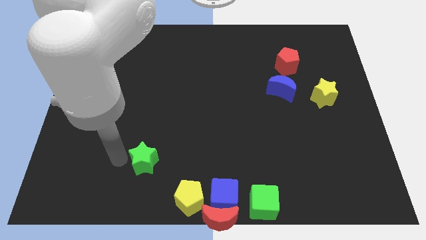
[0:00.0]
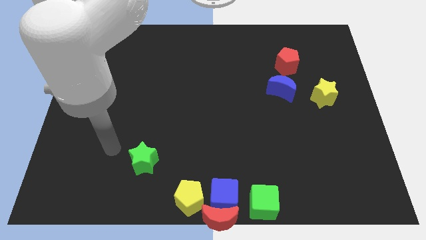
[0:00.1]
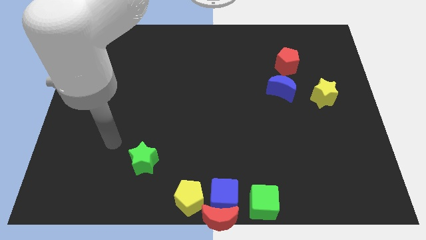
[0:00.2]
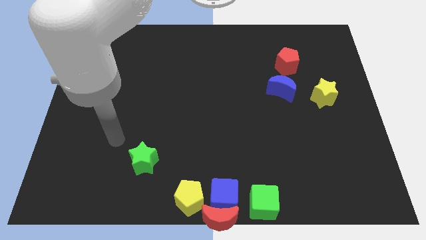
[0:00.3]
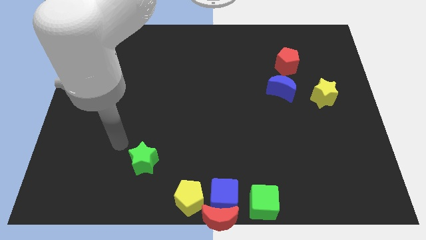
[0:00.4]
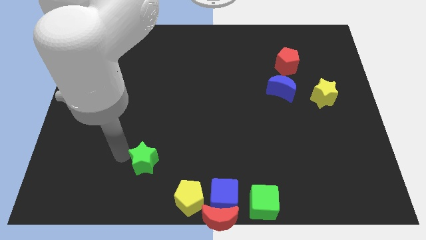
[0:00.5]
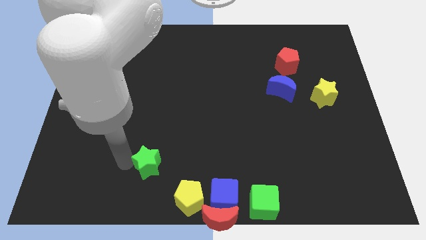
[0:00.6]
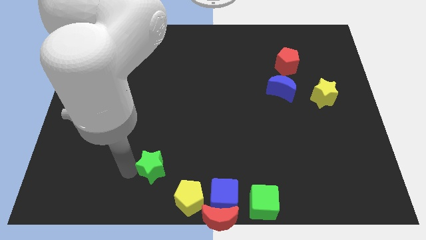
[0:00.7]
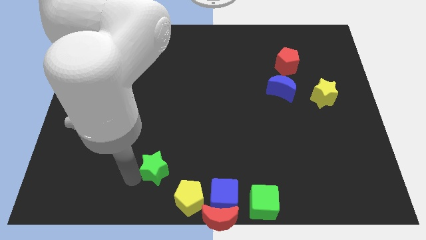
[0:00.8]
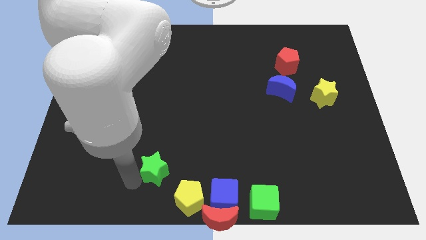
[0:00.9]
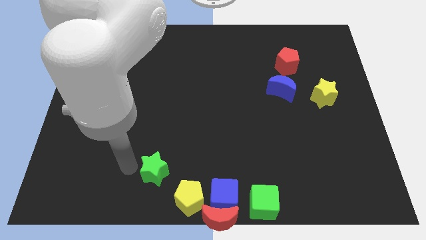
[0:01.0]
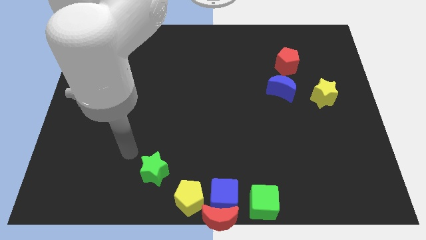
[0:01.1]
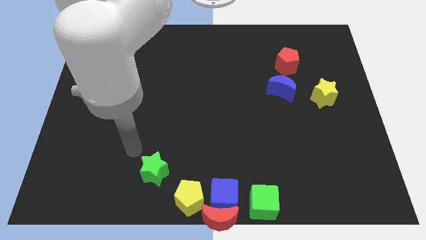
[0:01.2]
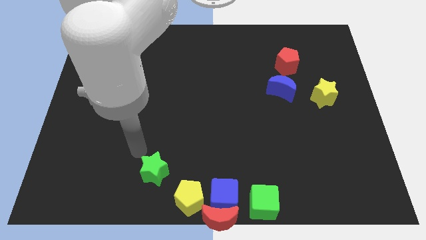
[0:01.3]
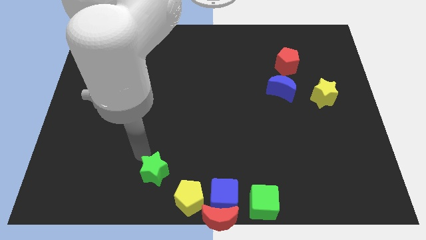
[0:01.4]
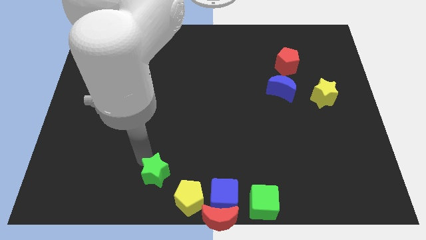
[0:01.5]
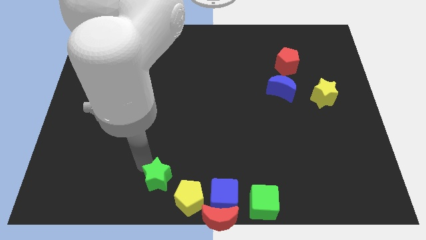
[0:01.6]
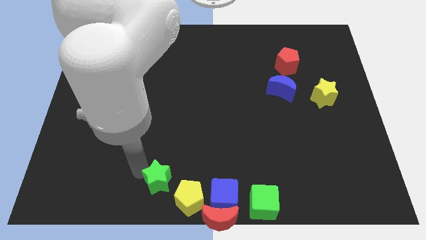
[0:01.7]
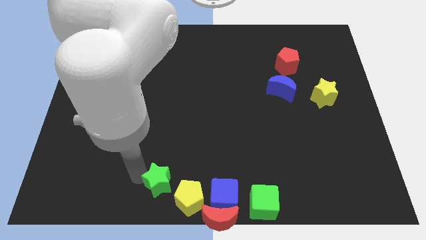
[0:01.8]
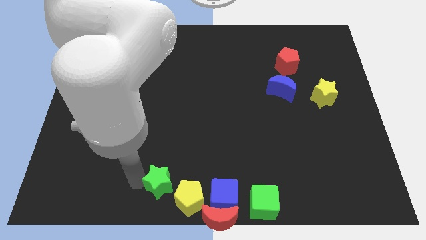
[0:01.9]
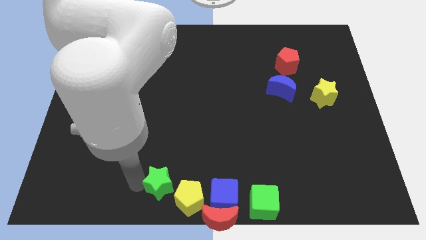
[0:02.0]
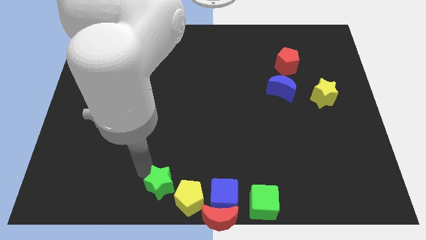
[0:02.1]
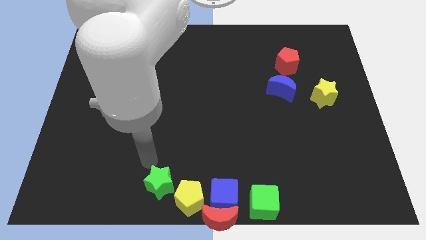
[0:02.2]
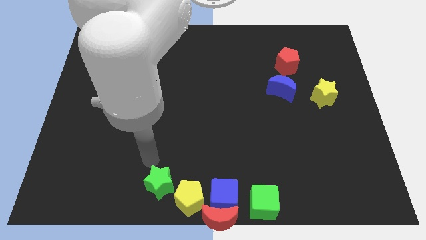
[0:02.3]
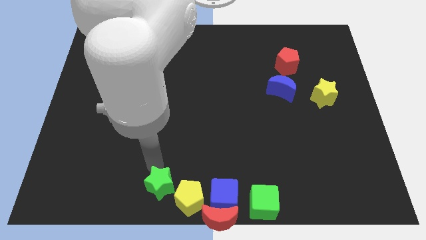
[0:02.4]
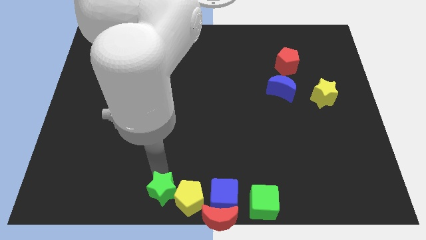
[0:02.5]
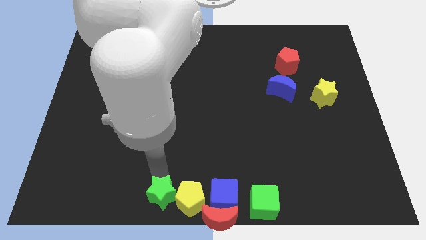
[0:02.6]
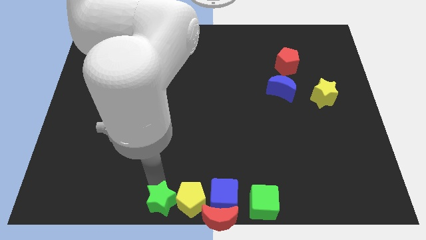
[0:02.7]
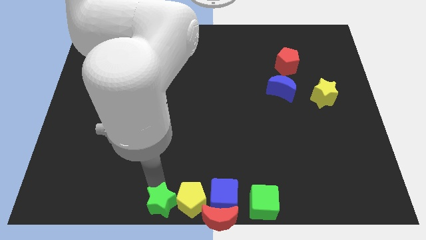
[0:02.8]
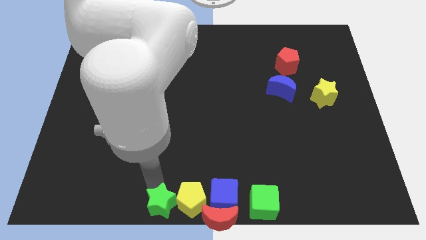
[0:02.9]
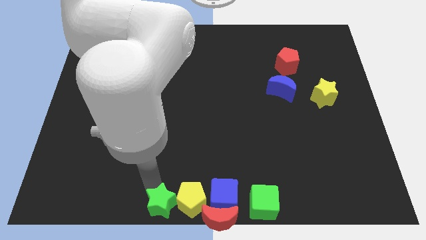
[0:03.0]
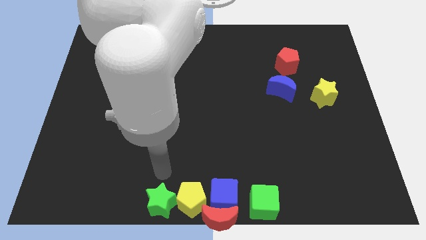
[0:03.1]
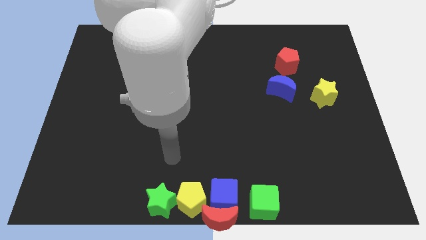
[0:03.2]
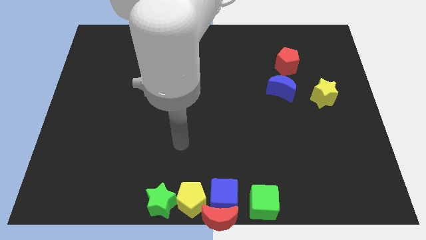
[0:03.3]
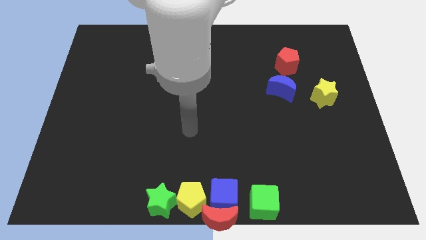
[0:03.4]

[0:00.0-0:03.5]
place the green star left to the yellow pentagon

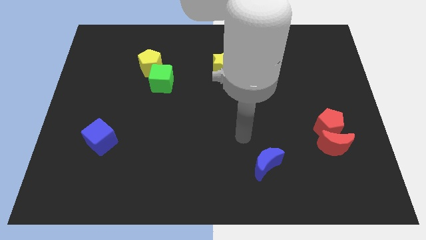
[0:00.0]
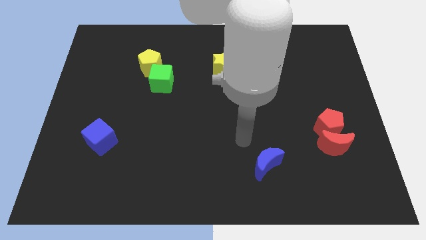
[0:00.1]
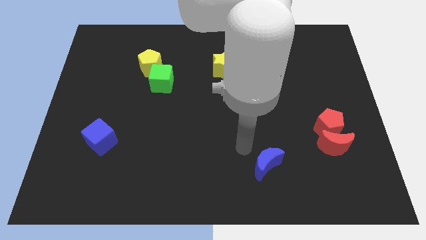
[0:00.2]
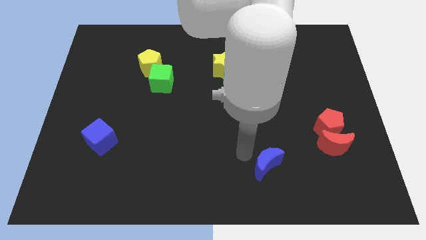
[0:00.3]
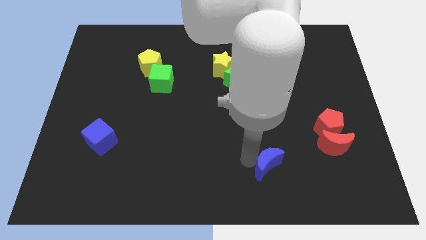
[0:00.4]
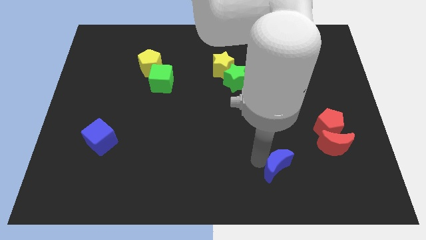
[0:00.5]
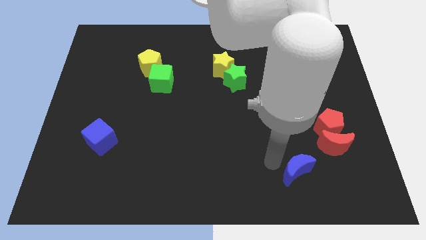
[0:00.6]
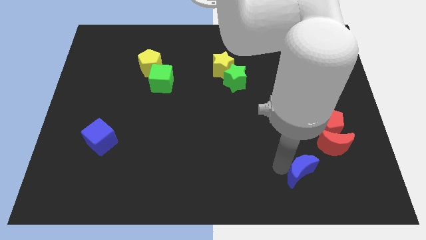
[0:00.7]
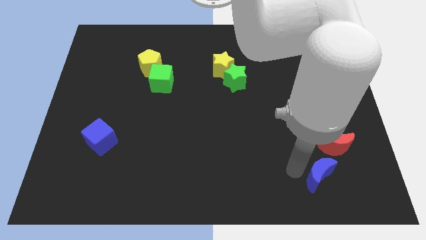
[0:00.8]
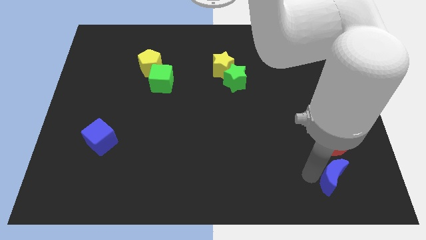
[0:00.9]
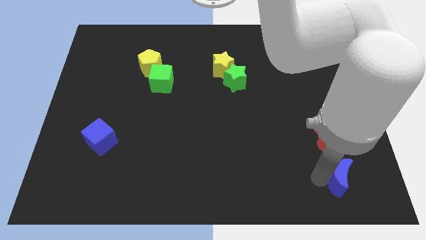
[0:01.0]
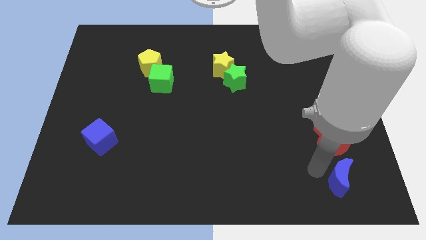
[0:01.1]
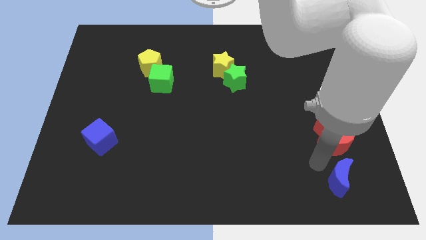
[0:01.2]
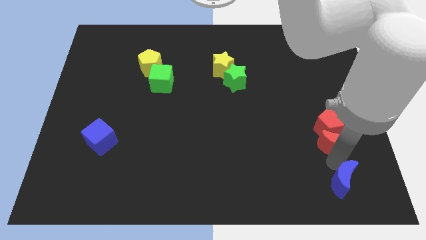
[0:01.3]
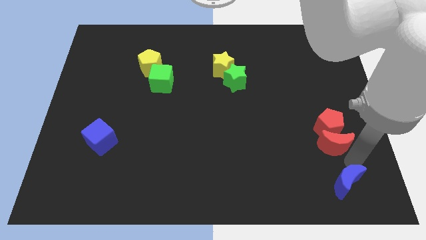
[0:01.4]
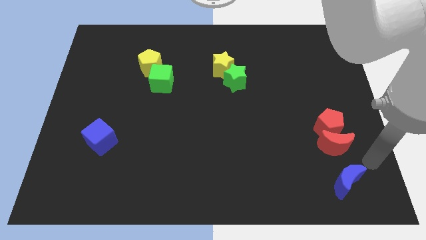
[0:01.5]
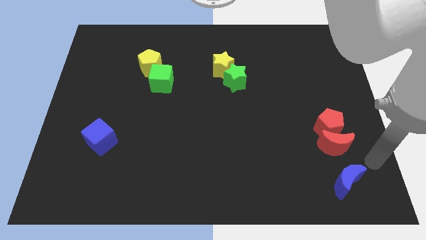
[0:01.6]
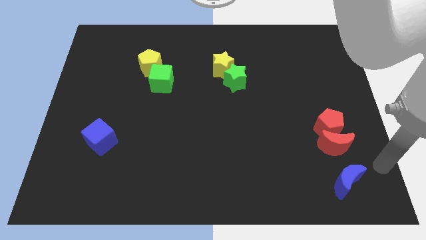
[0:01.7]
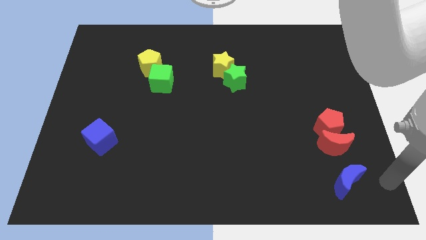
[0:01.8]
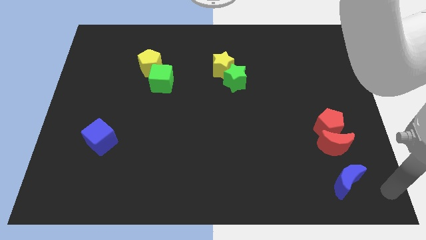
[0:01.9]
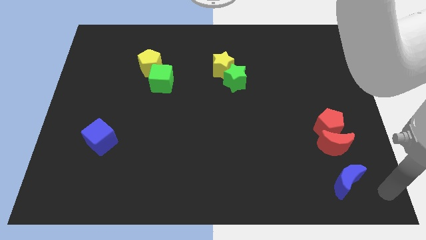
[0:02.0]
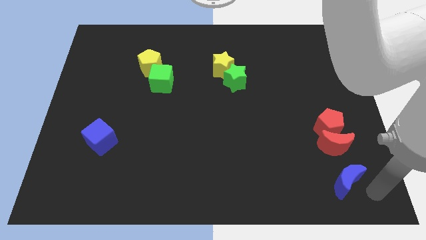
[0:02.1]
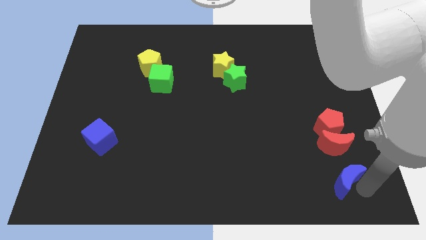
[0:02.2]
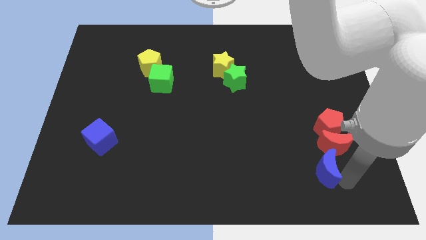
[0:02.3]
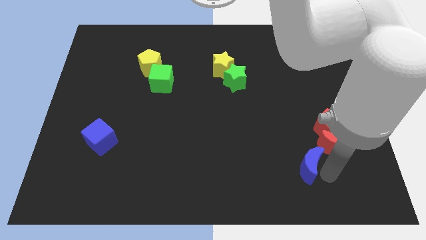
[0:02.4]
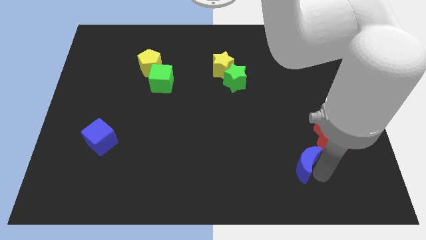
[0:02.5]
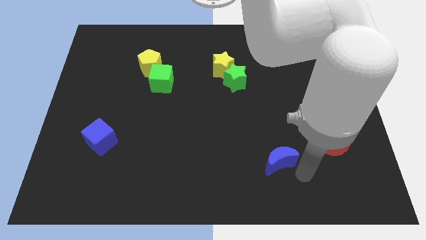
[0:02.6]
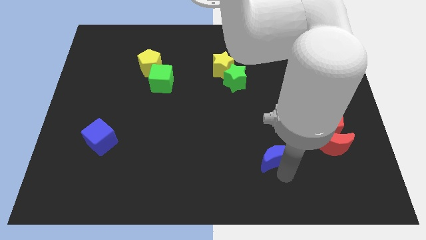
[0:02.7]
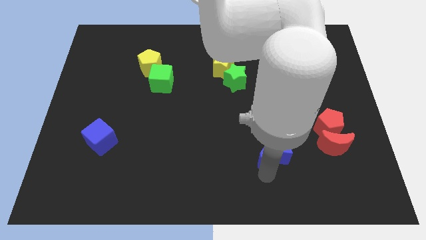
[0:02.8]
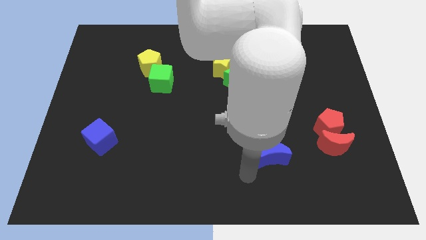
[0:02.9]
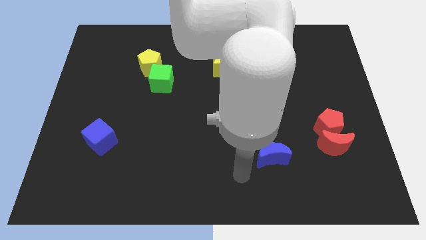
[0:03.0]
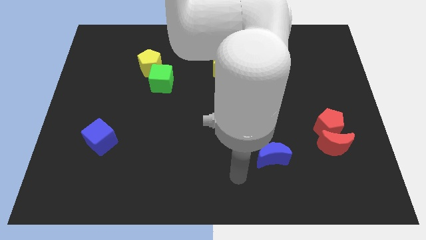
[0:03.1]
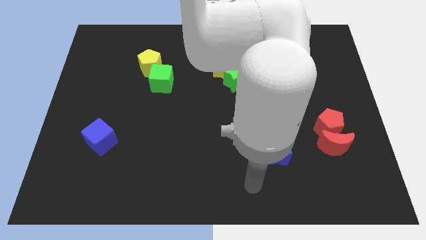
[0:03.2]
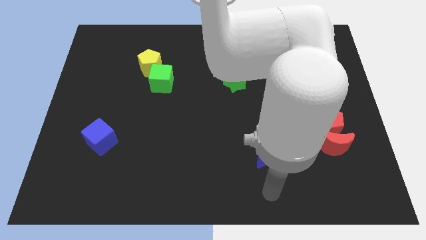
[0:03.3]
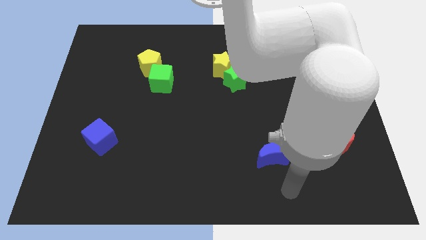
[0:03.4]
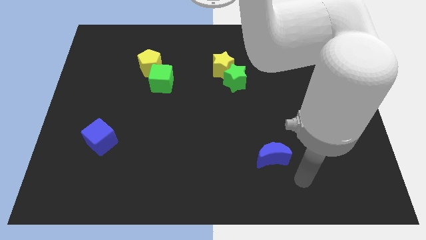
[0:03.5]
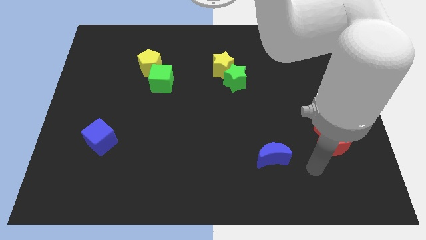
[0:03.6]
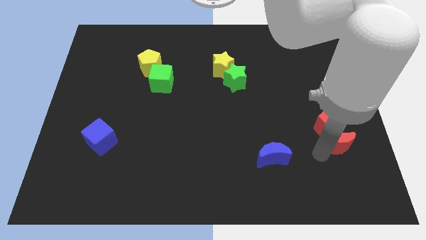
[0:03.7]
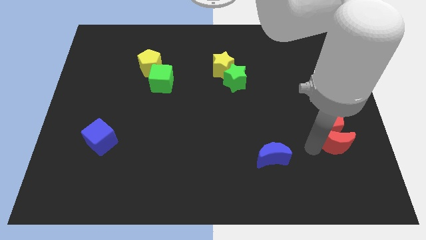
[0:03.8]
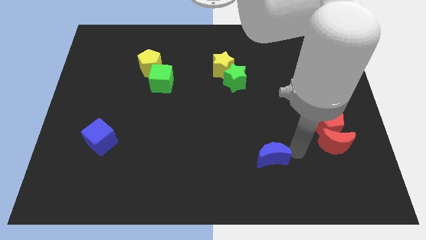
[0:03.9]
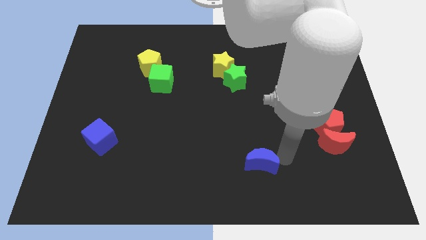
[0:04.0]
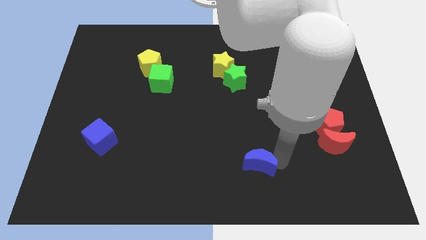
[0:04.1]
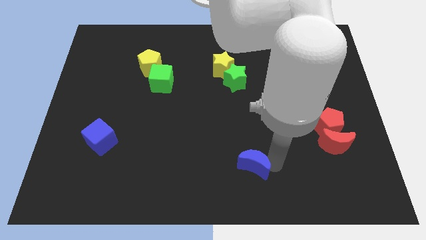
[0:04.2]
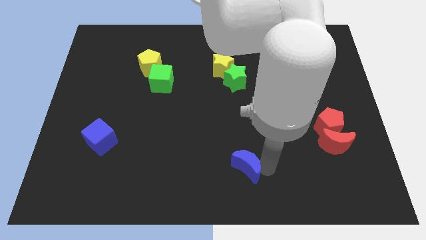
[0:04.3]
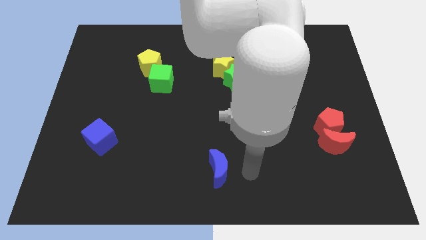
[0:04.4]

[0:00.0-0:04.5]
move the blue crescent below the green star

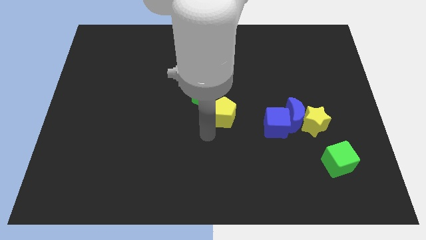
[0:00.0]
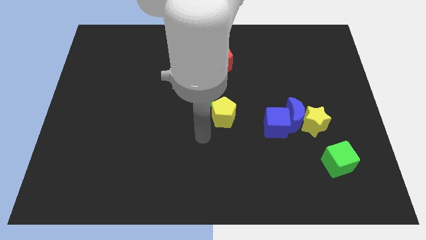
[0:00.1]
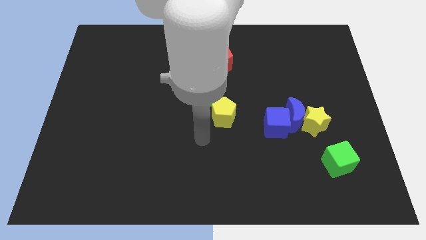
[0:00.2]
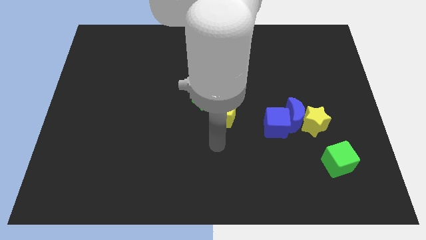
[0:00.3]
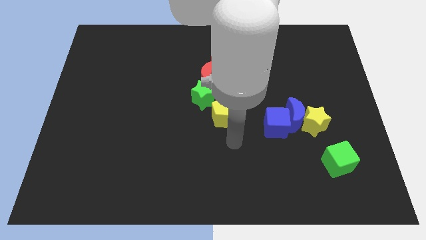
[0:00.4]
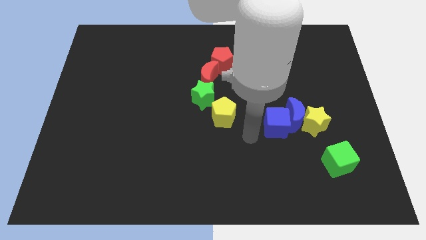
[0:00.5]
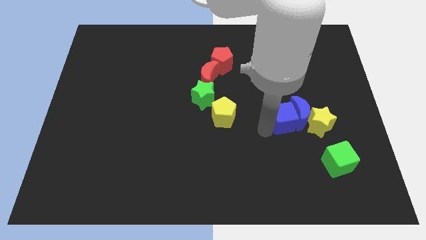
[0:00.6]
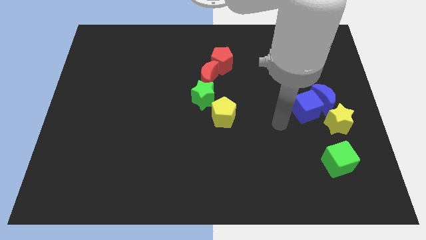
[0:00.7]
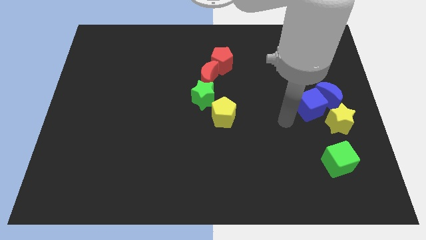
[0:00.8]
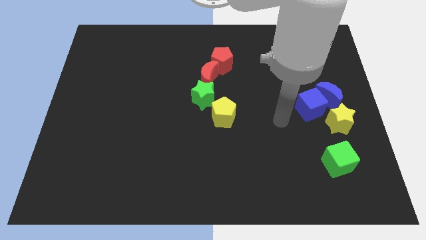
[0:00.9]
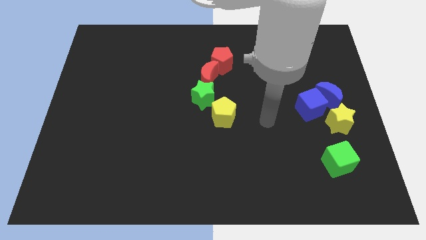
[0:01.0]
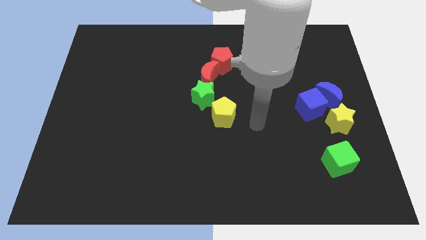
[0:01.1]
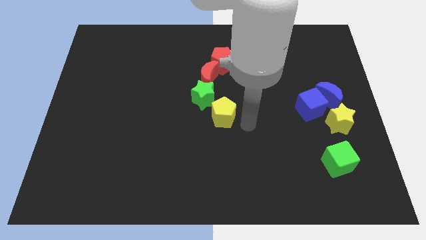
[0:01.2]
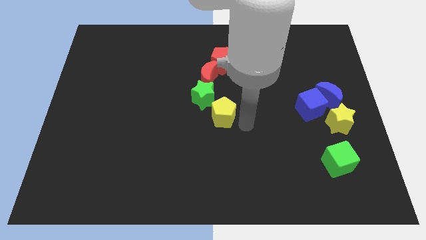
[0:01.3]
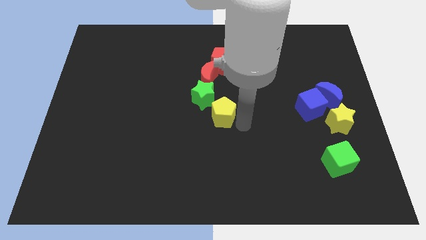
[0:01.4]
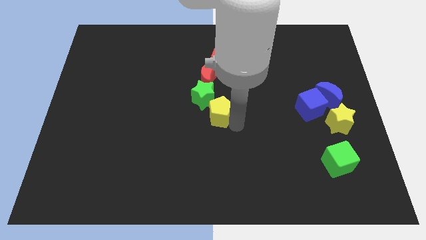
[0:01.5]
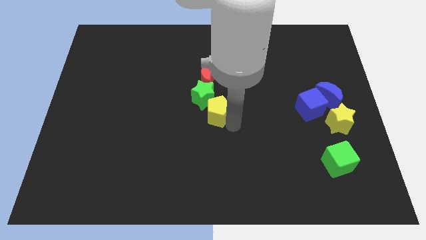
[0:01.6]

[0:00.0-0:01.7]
move your arm to the right side of the yellow pentagon
